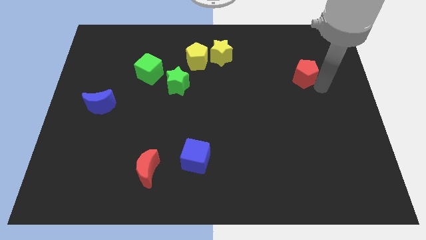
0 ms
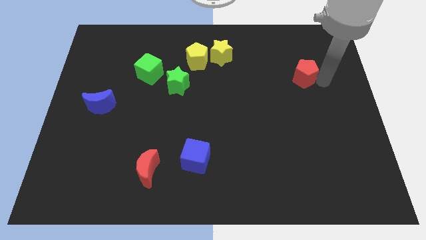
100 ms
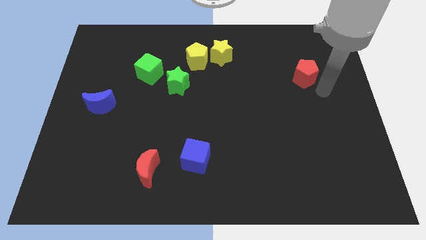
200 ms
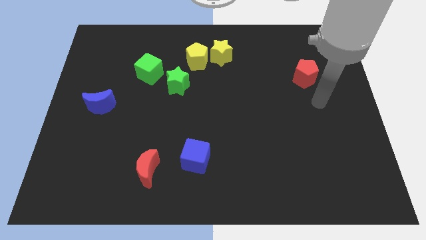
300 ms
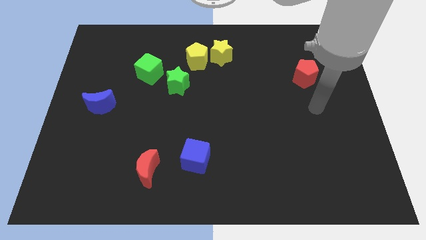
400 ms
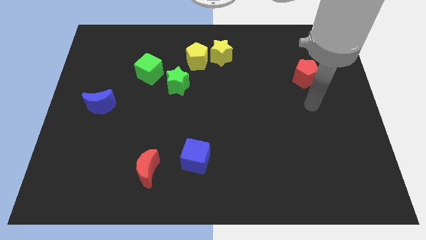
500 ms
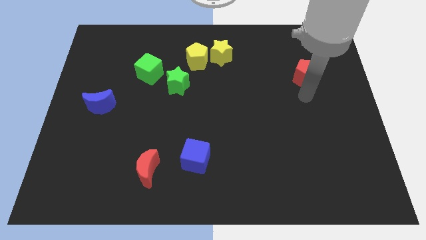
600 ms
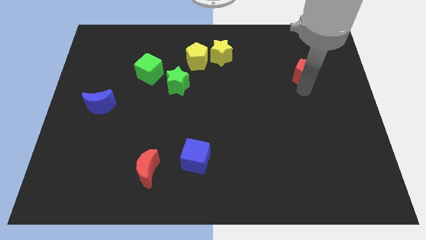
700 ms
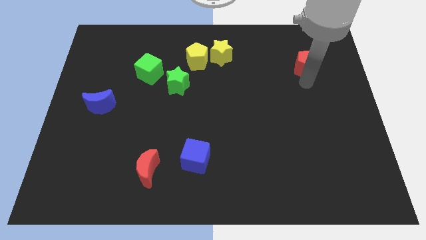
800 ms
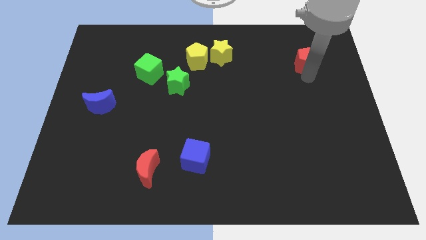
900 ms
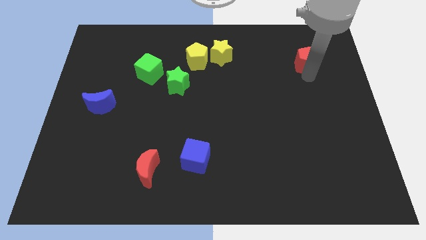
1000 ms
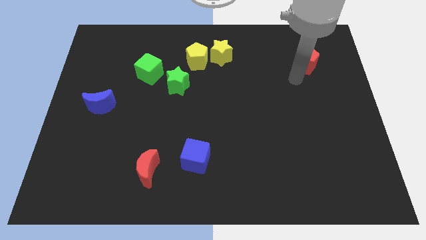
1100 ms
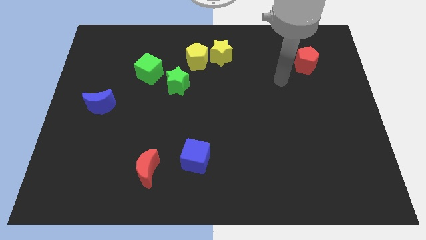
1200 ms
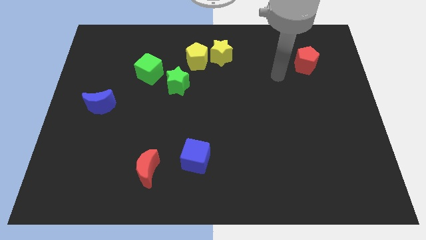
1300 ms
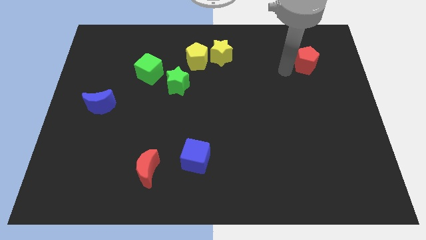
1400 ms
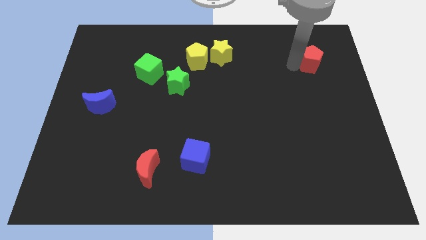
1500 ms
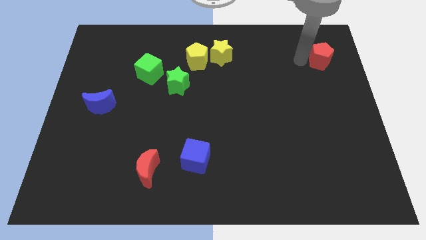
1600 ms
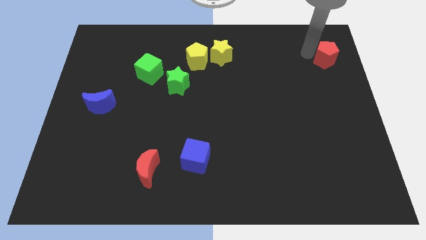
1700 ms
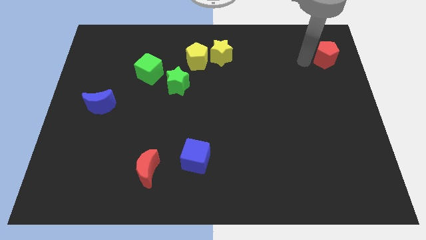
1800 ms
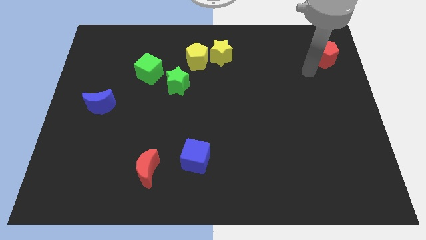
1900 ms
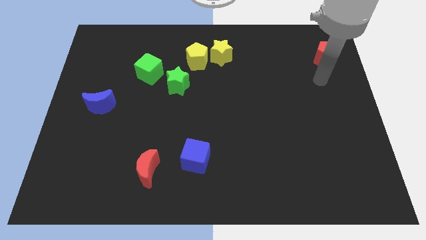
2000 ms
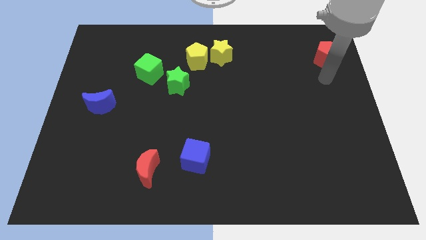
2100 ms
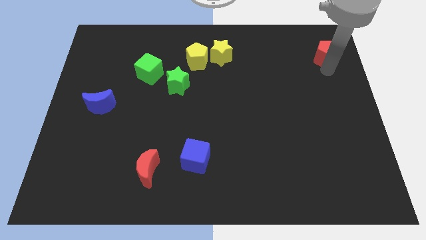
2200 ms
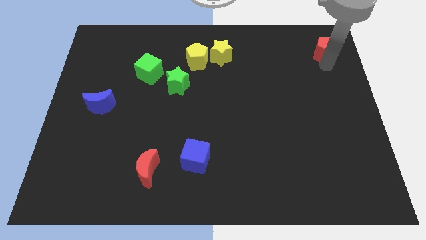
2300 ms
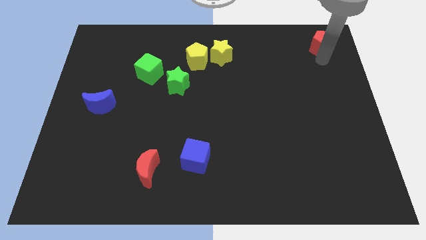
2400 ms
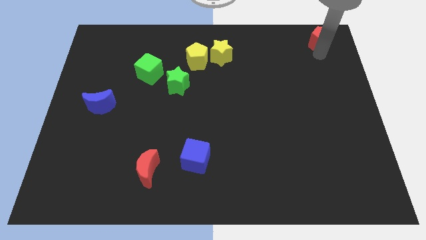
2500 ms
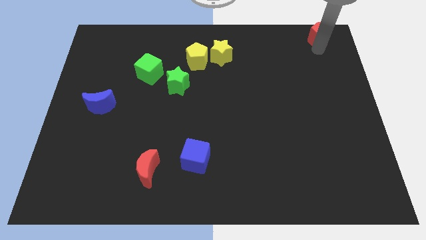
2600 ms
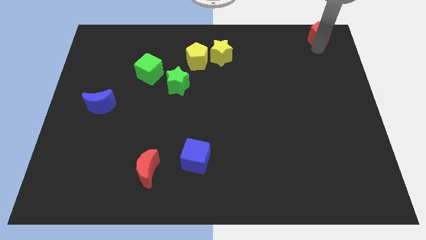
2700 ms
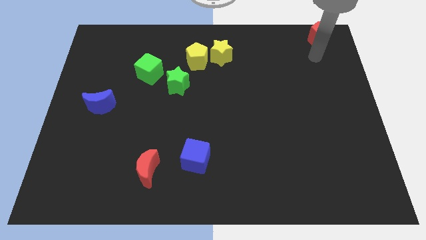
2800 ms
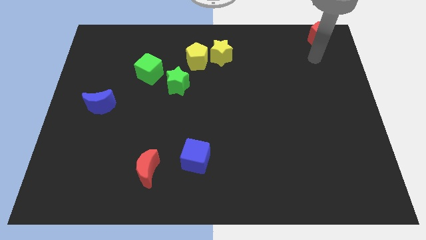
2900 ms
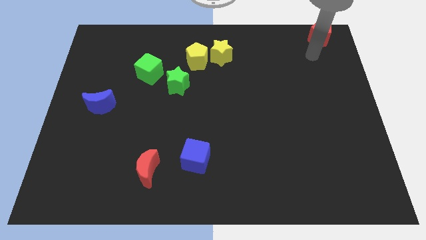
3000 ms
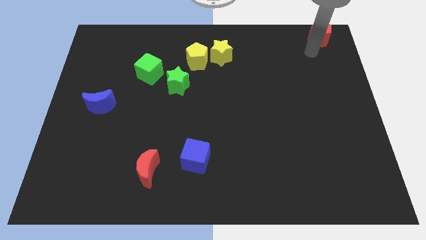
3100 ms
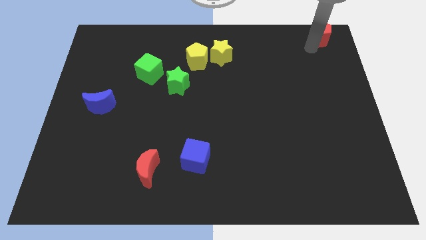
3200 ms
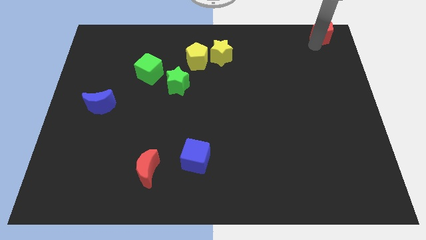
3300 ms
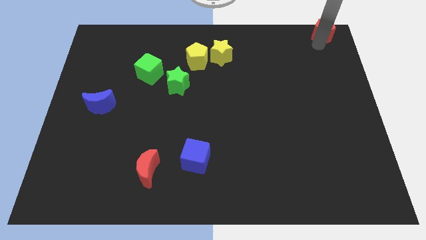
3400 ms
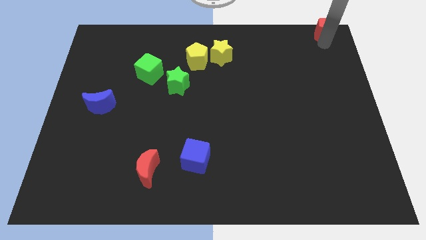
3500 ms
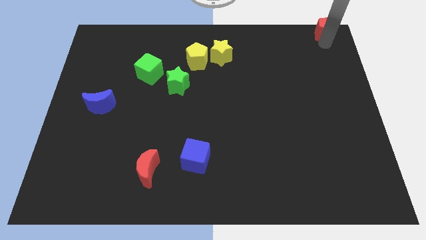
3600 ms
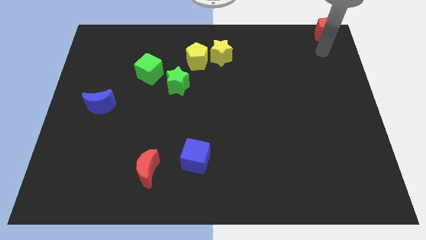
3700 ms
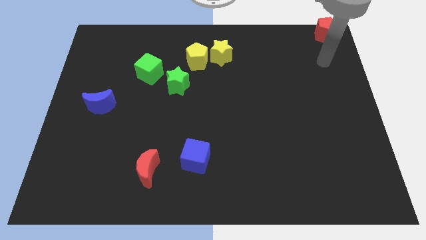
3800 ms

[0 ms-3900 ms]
place the red pentagon at the top right corner of the board

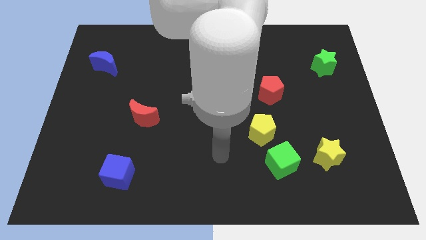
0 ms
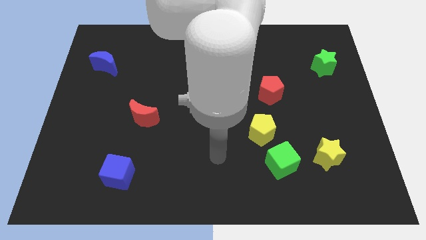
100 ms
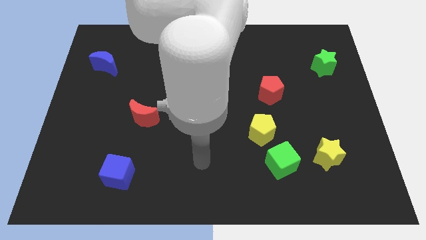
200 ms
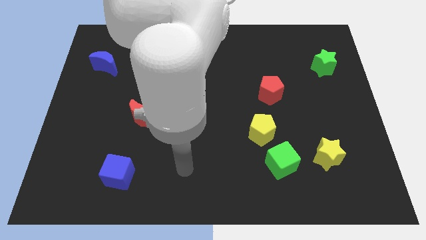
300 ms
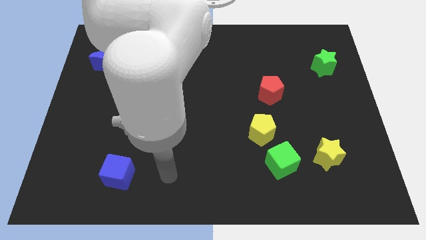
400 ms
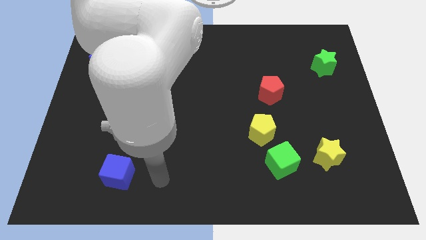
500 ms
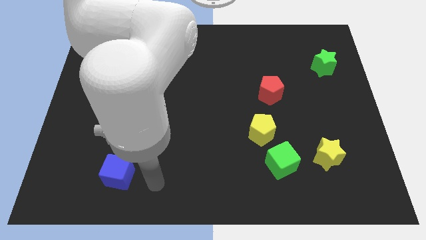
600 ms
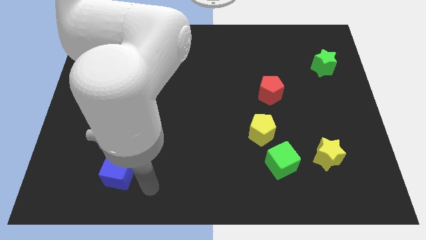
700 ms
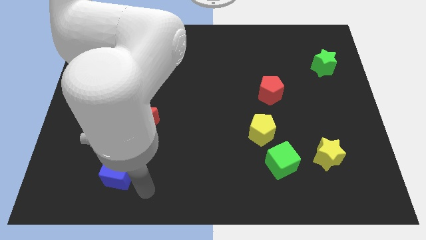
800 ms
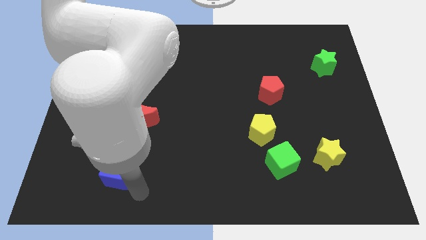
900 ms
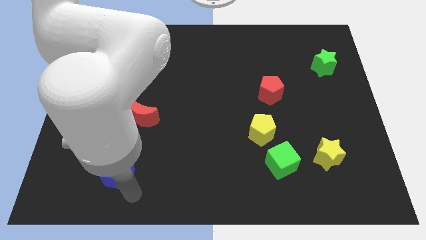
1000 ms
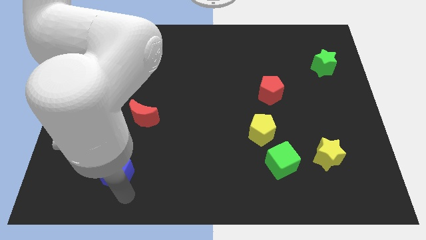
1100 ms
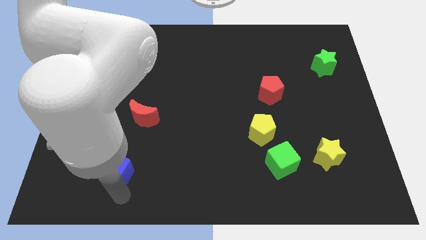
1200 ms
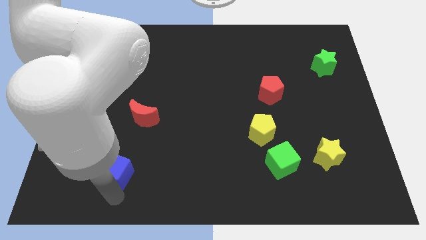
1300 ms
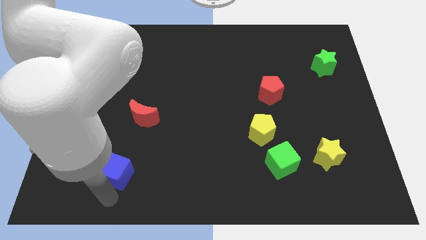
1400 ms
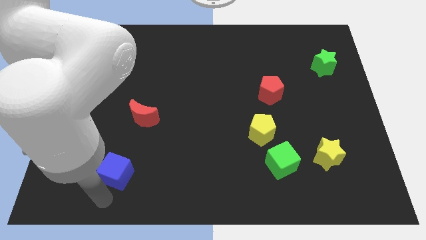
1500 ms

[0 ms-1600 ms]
place the arm below the blue cube

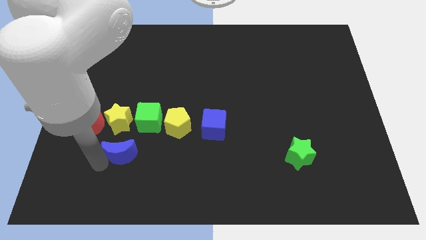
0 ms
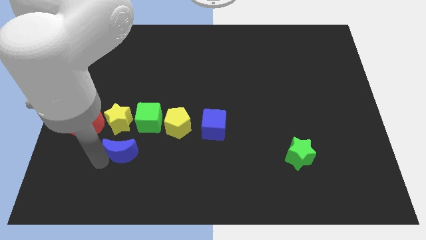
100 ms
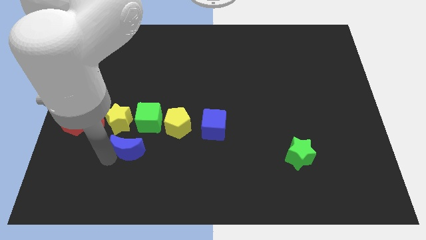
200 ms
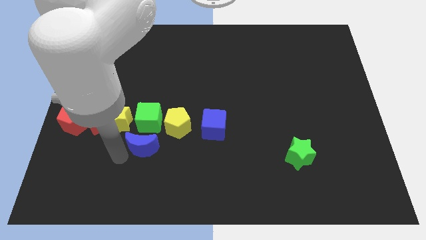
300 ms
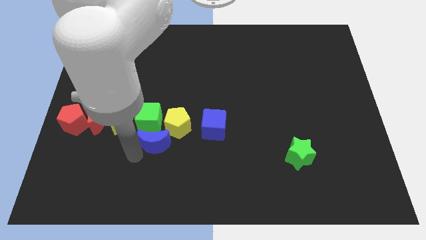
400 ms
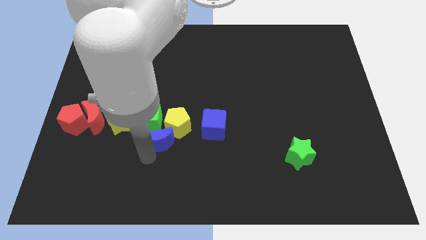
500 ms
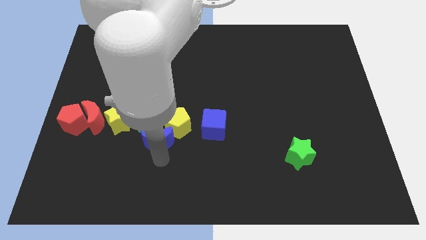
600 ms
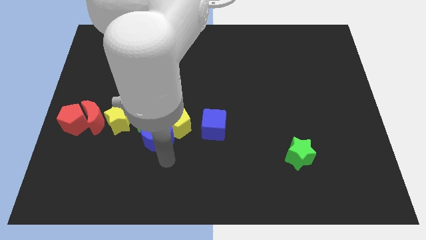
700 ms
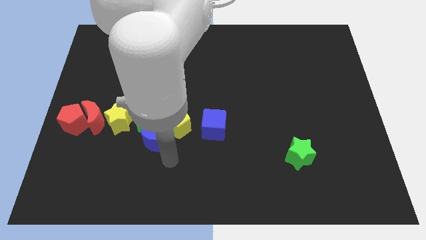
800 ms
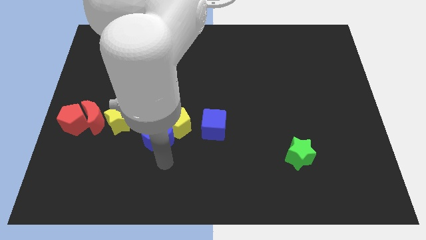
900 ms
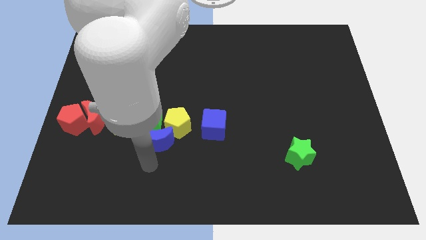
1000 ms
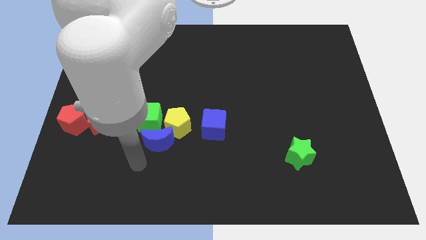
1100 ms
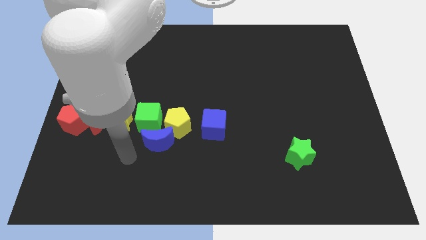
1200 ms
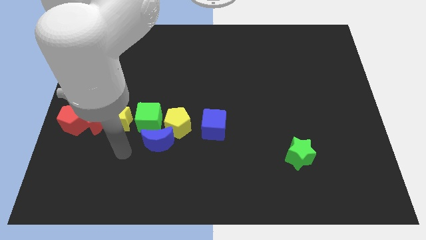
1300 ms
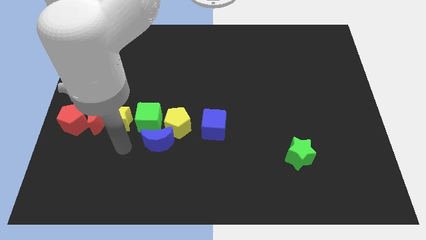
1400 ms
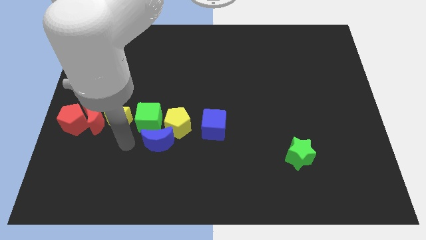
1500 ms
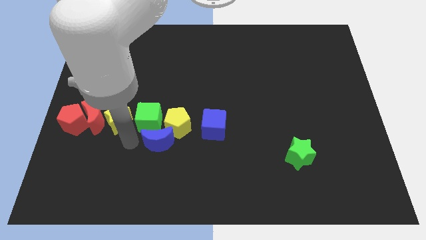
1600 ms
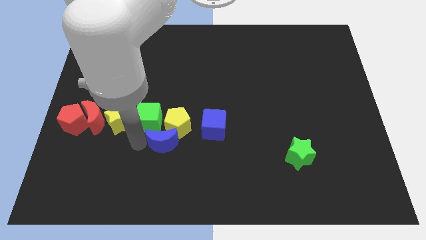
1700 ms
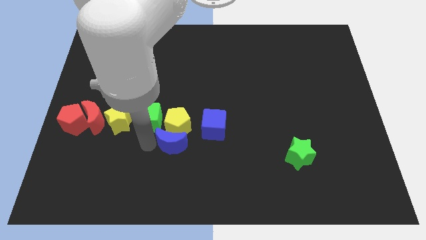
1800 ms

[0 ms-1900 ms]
move the blue crescent into the yellow pentagon

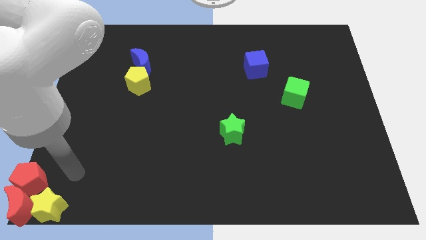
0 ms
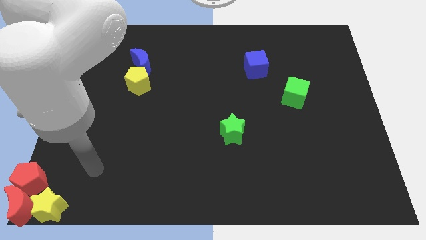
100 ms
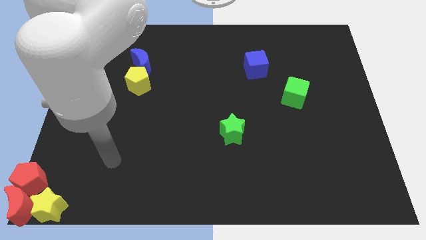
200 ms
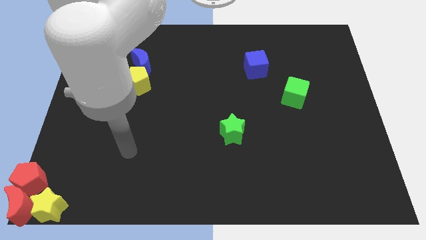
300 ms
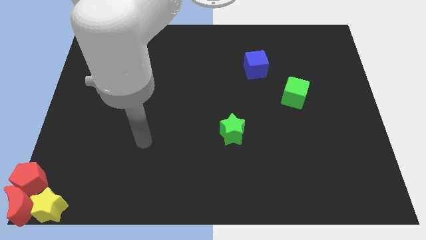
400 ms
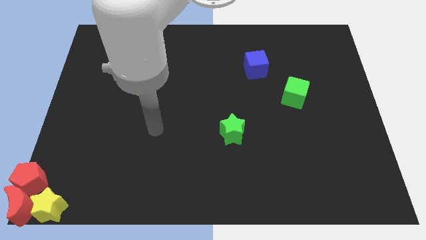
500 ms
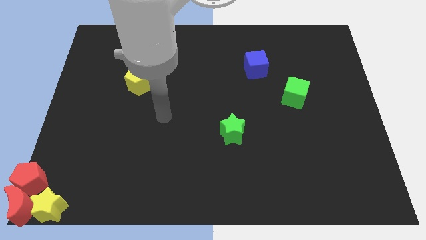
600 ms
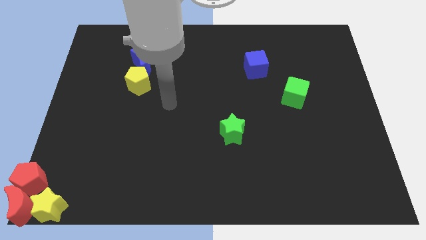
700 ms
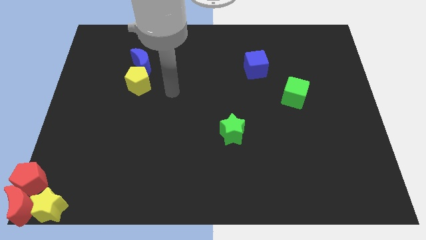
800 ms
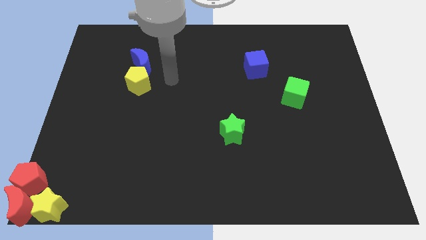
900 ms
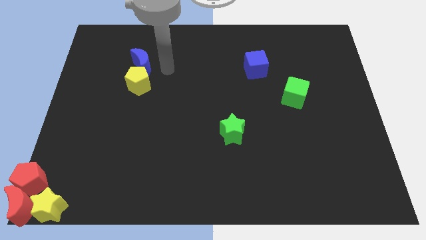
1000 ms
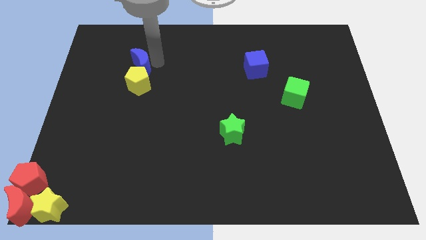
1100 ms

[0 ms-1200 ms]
move your arm towards the blue moon

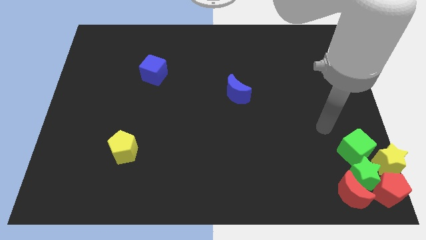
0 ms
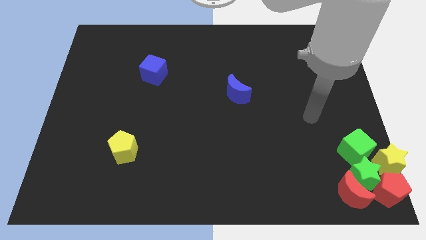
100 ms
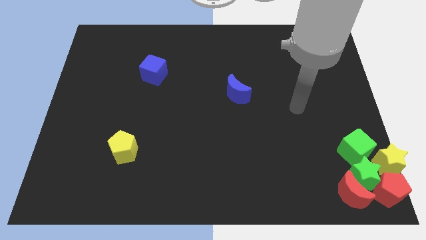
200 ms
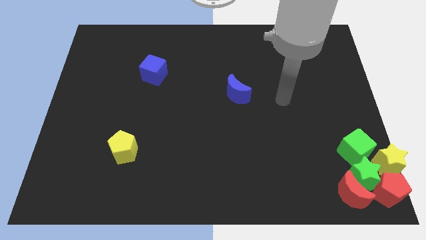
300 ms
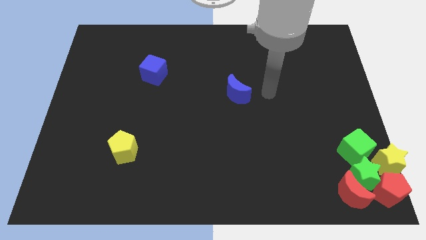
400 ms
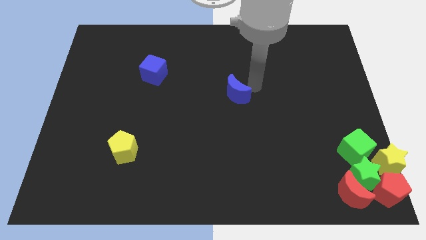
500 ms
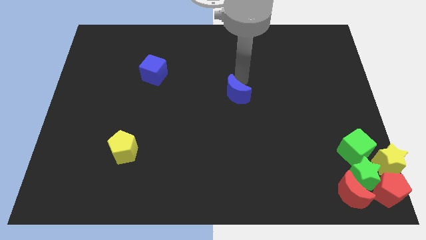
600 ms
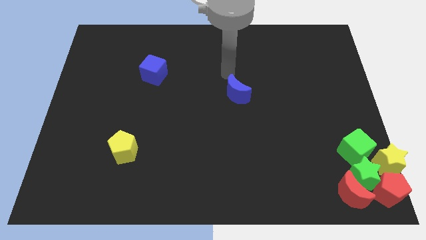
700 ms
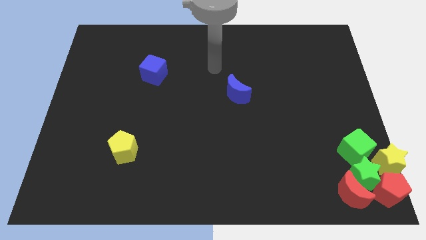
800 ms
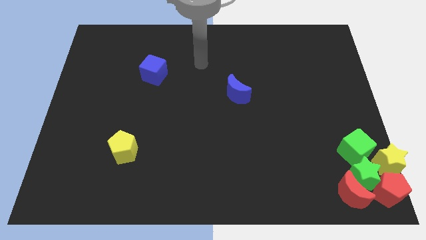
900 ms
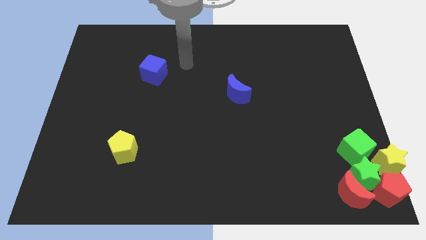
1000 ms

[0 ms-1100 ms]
move your arm away from the green cube
